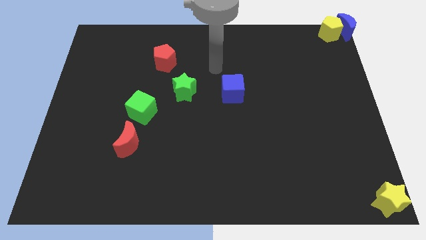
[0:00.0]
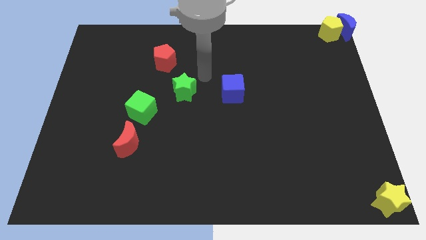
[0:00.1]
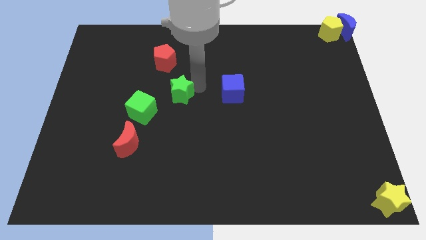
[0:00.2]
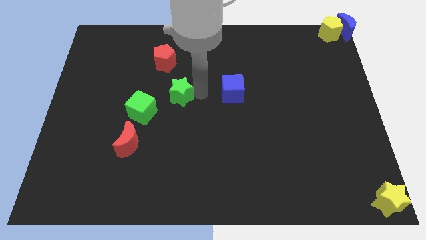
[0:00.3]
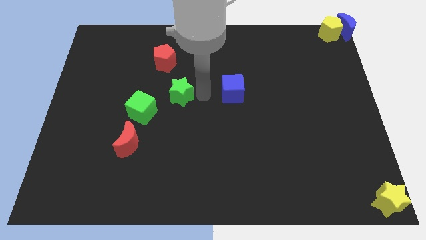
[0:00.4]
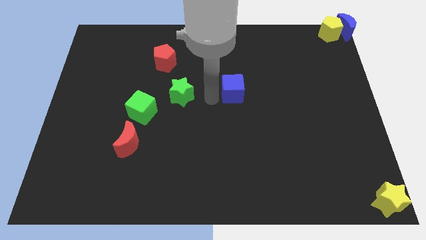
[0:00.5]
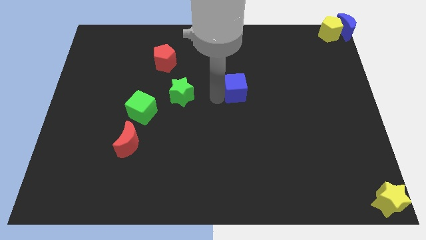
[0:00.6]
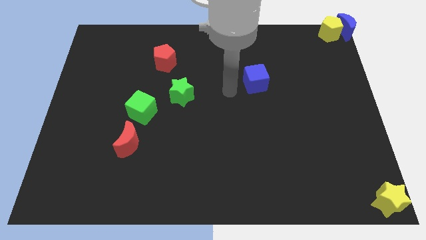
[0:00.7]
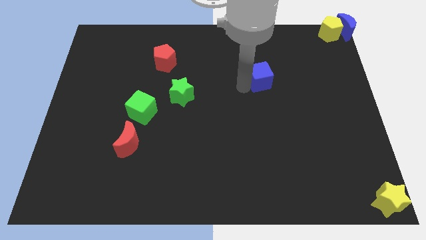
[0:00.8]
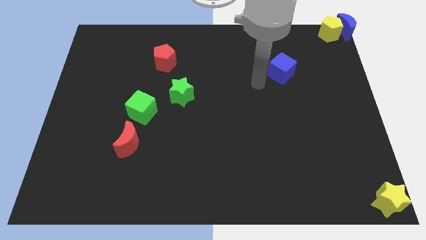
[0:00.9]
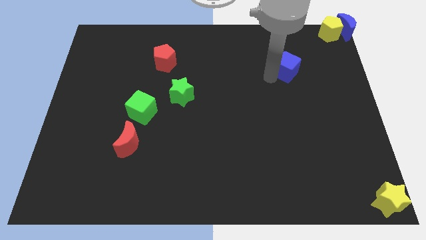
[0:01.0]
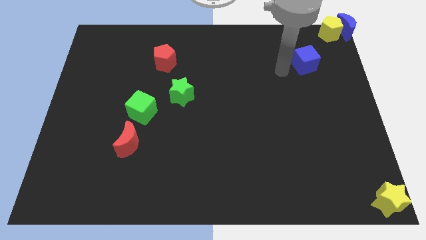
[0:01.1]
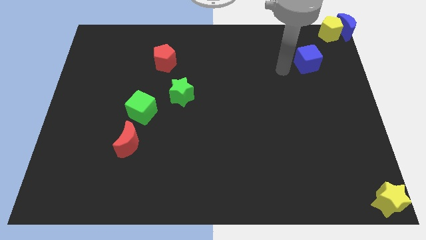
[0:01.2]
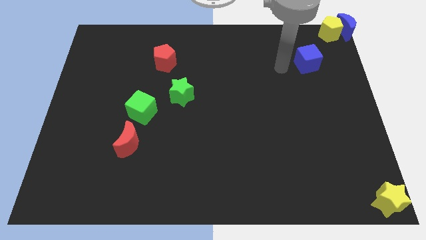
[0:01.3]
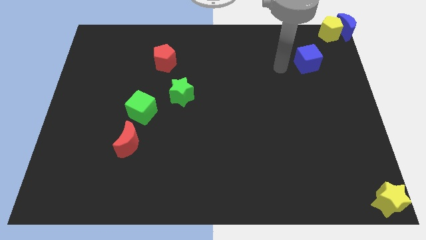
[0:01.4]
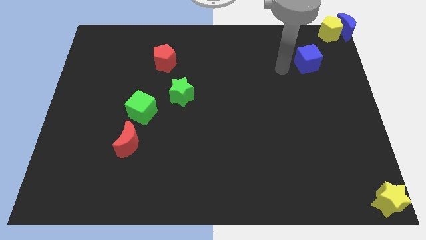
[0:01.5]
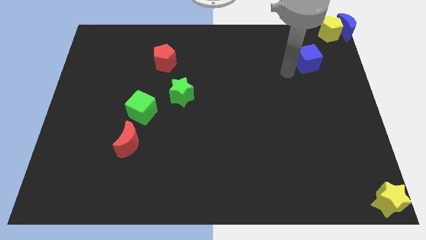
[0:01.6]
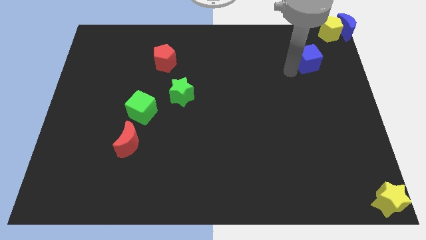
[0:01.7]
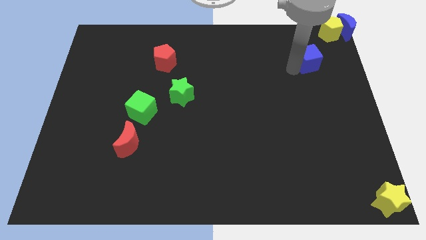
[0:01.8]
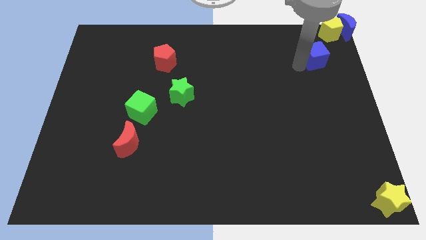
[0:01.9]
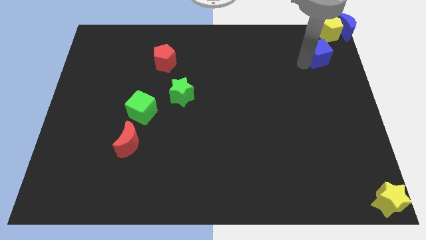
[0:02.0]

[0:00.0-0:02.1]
move the blue cube close to the yellow pentagon

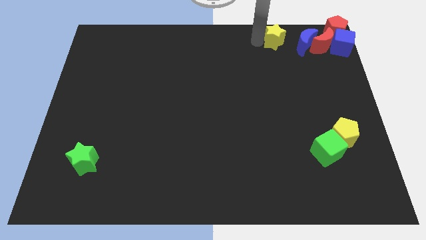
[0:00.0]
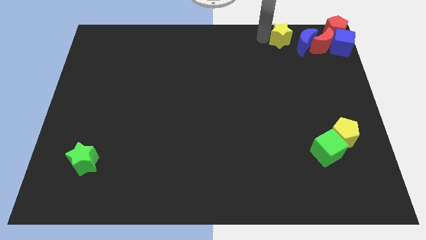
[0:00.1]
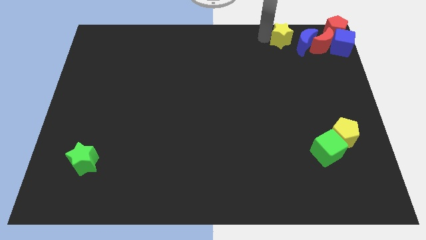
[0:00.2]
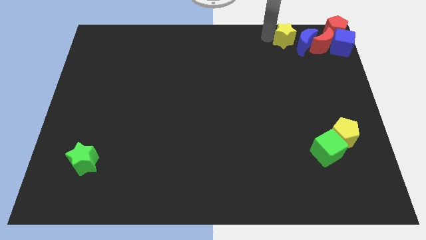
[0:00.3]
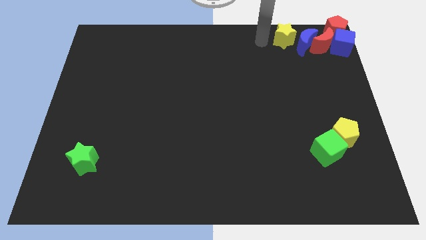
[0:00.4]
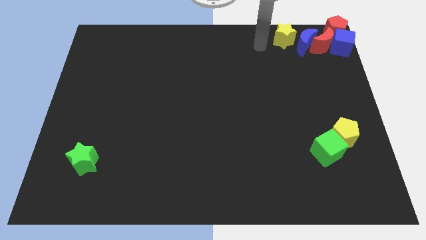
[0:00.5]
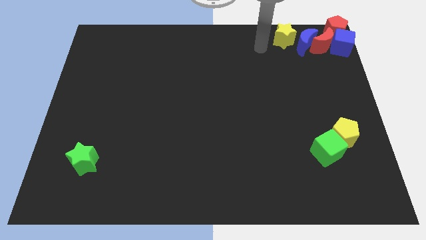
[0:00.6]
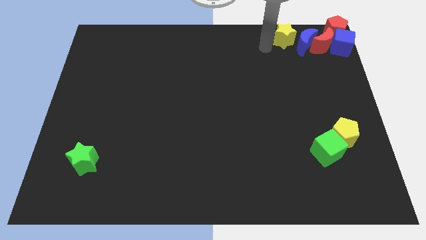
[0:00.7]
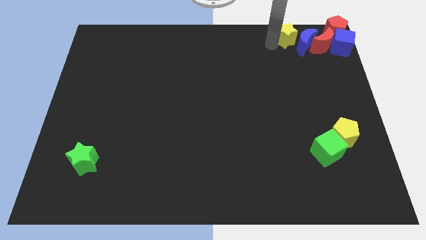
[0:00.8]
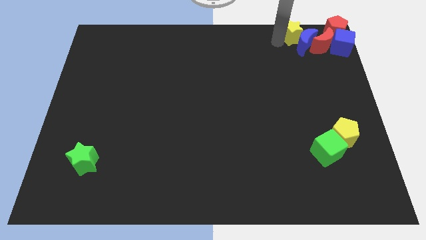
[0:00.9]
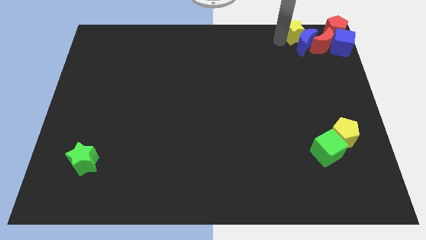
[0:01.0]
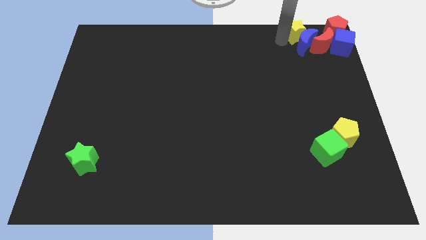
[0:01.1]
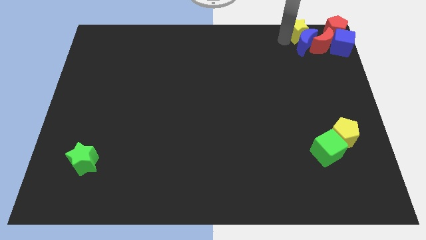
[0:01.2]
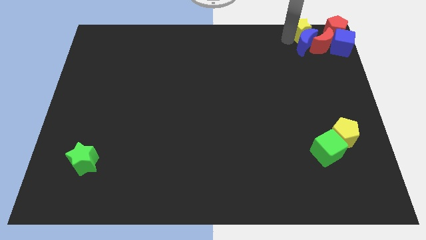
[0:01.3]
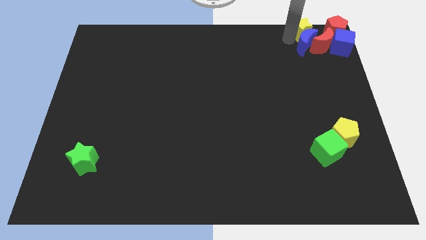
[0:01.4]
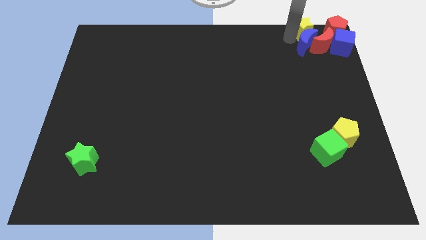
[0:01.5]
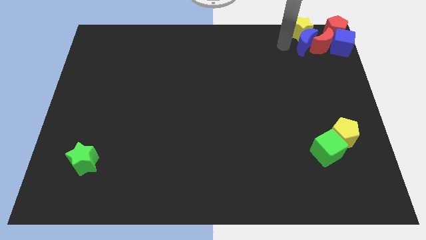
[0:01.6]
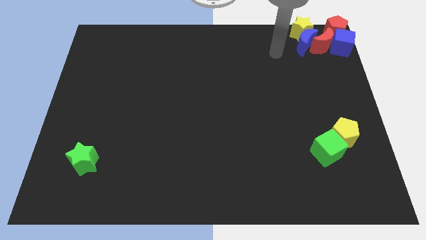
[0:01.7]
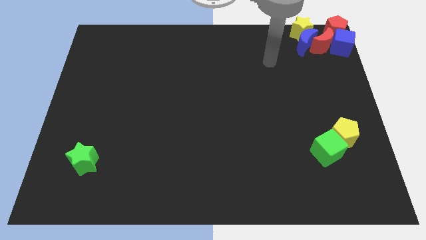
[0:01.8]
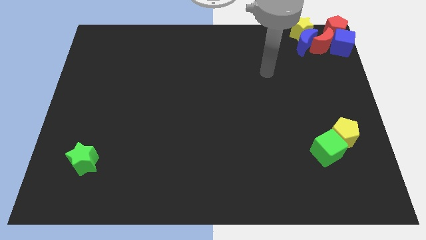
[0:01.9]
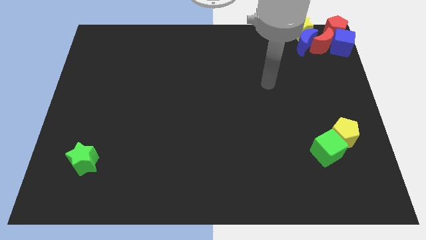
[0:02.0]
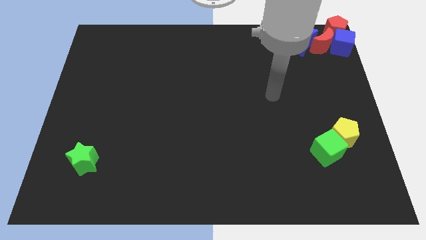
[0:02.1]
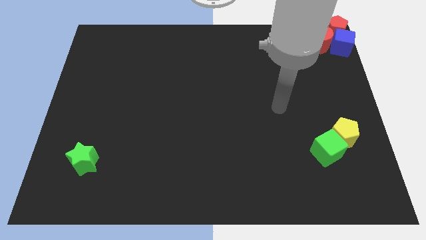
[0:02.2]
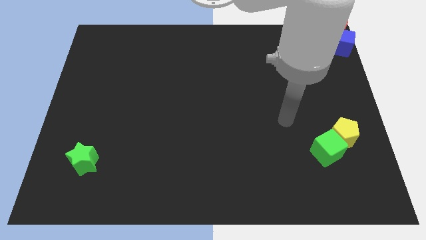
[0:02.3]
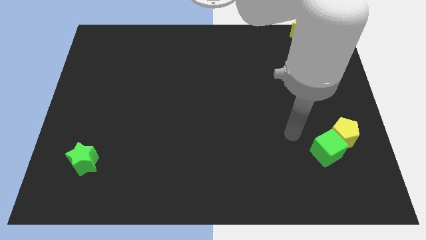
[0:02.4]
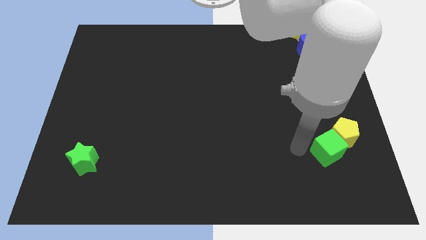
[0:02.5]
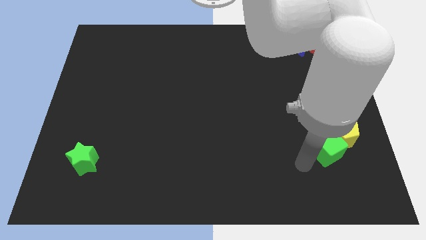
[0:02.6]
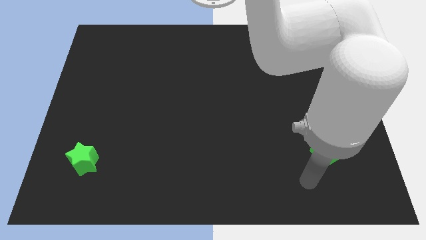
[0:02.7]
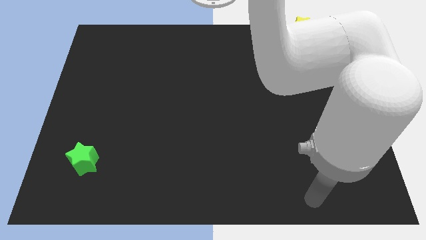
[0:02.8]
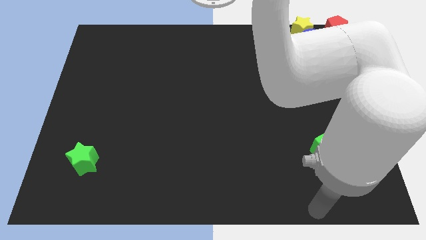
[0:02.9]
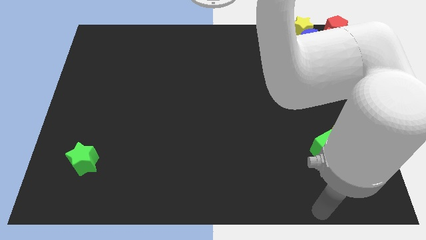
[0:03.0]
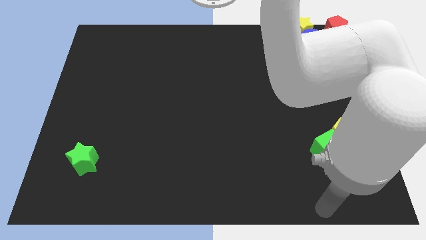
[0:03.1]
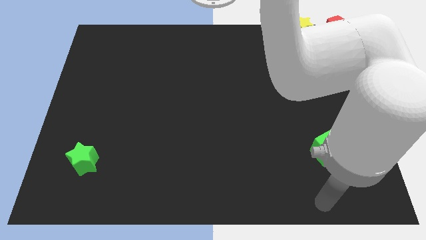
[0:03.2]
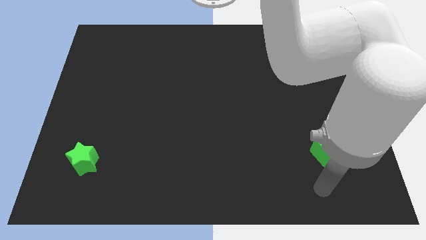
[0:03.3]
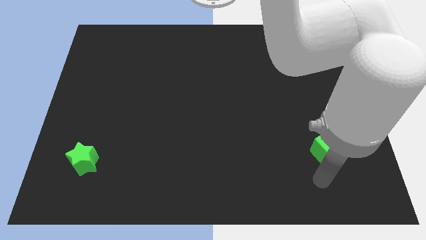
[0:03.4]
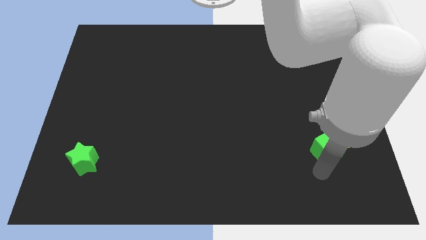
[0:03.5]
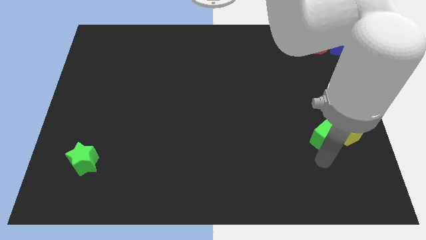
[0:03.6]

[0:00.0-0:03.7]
move your arm towards the green cube

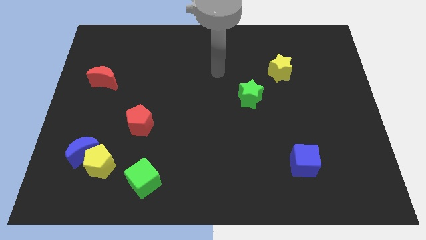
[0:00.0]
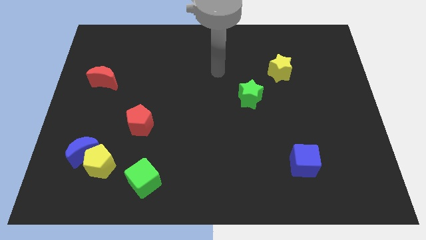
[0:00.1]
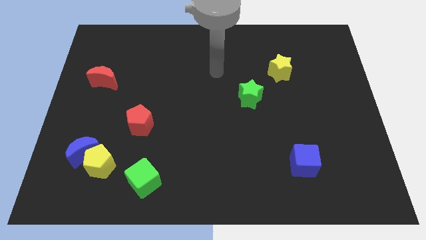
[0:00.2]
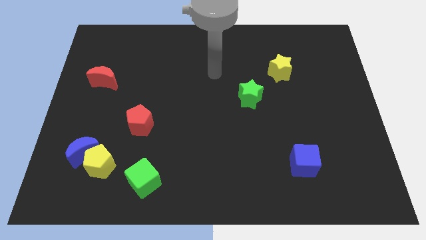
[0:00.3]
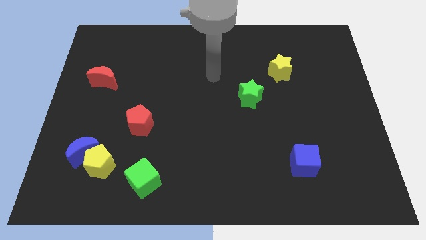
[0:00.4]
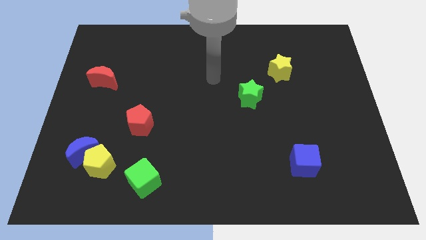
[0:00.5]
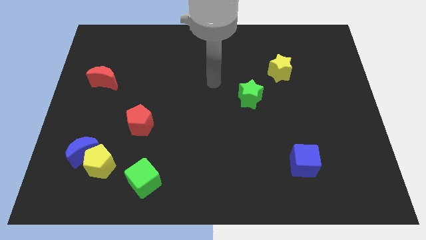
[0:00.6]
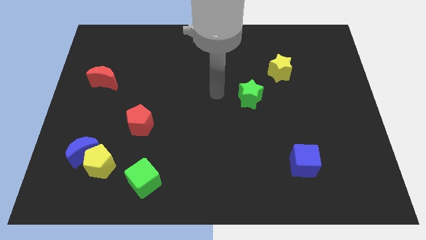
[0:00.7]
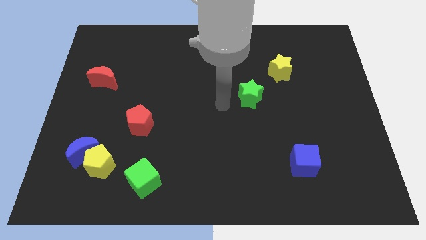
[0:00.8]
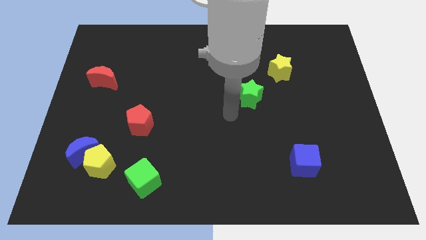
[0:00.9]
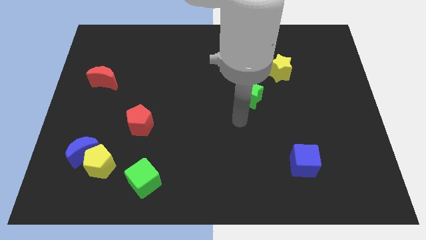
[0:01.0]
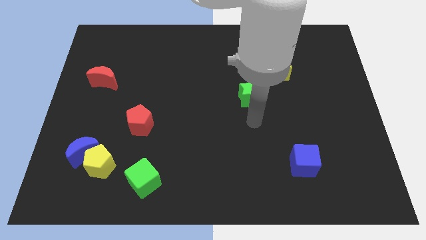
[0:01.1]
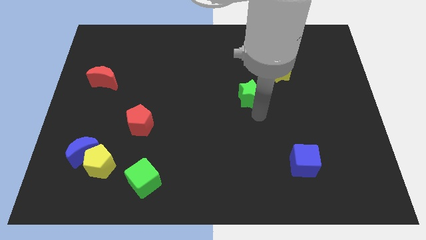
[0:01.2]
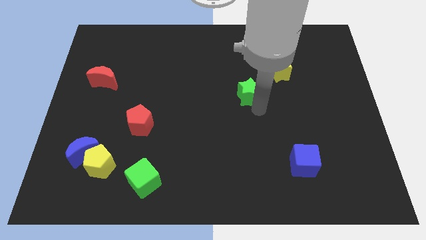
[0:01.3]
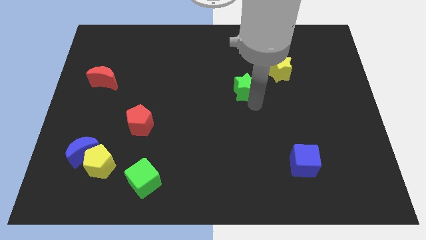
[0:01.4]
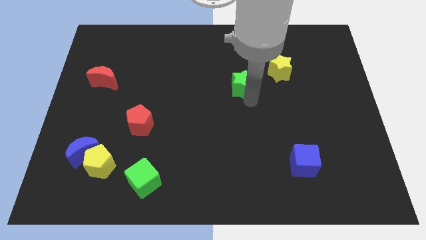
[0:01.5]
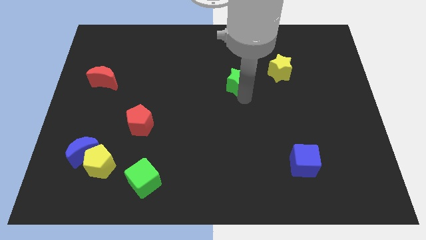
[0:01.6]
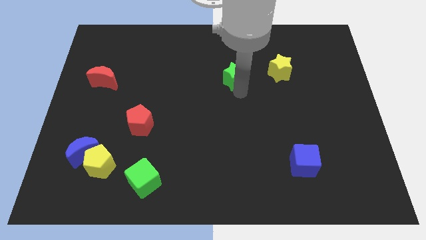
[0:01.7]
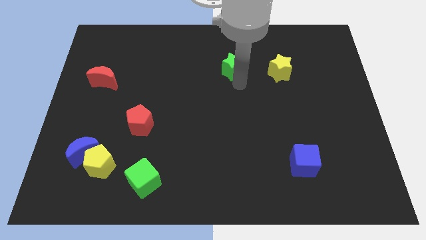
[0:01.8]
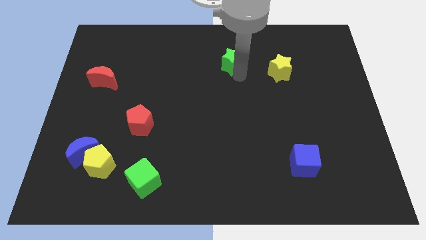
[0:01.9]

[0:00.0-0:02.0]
place green star to the left of yellow star

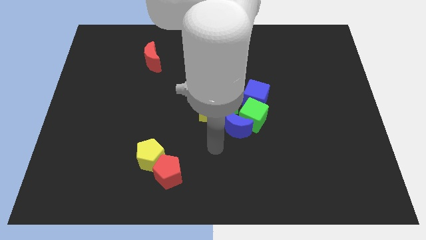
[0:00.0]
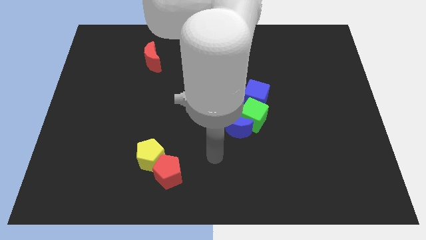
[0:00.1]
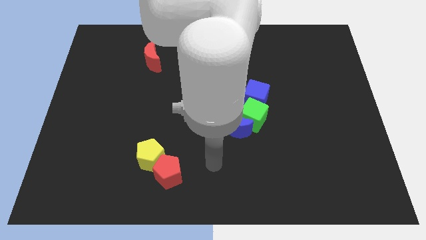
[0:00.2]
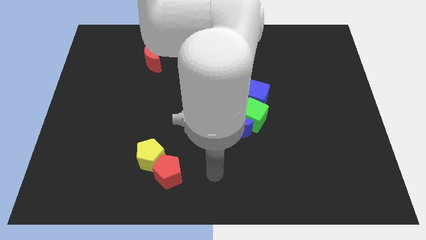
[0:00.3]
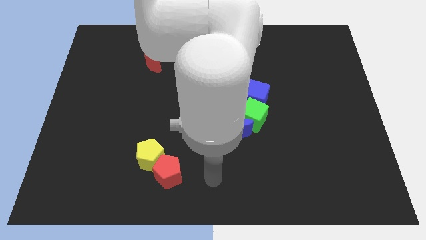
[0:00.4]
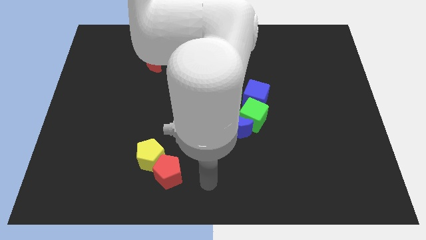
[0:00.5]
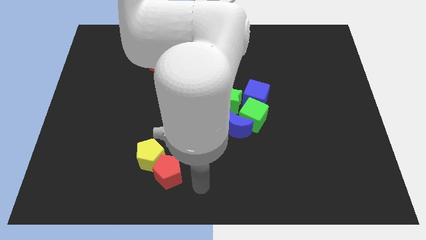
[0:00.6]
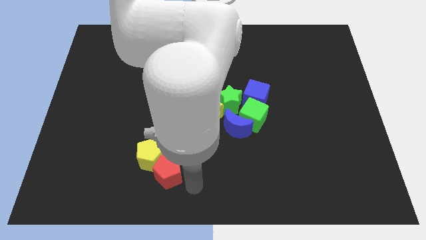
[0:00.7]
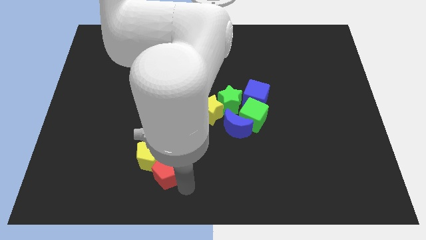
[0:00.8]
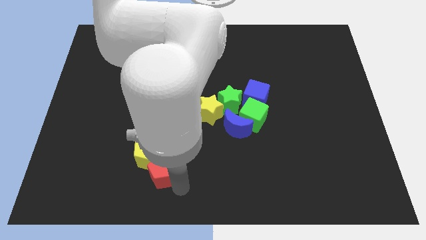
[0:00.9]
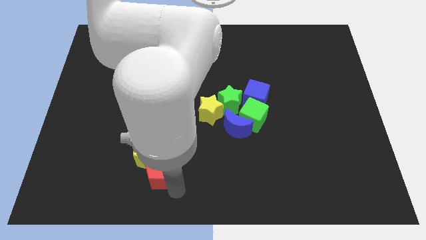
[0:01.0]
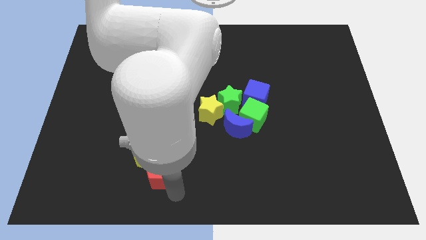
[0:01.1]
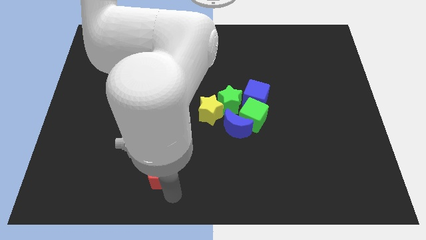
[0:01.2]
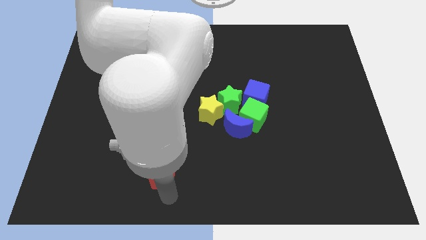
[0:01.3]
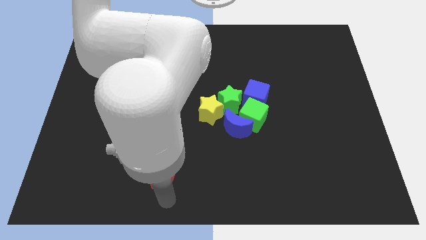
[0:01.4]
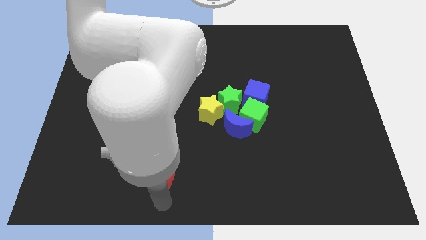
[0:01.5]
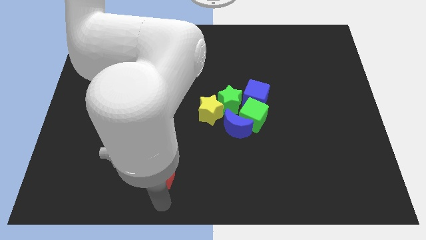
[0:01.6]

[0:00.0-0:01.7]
point your arm below the red pentagon
